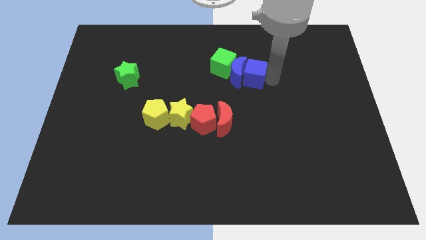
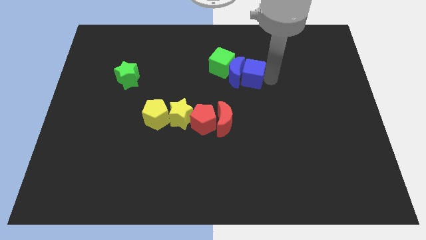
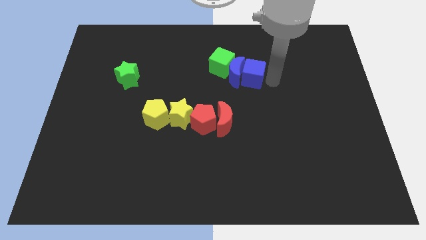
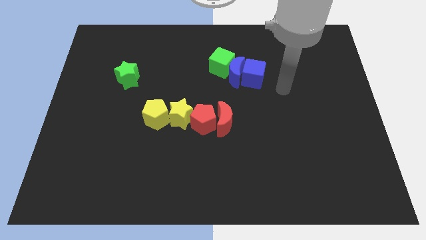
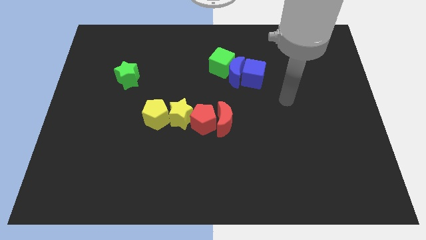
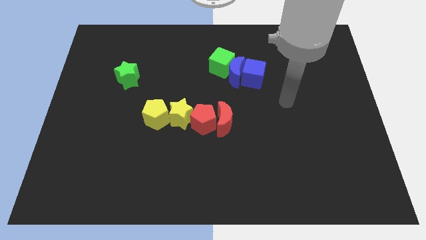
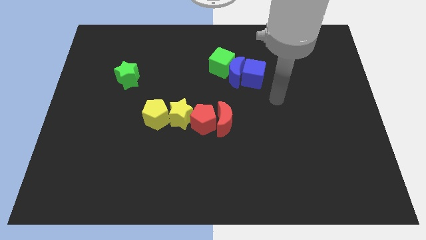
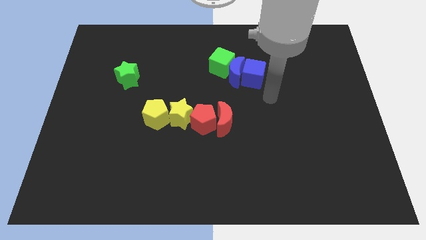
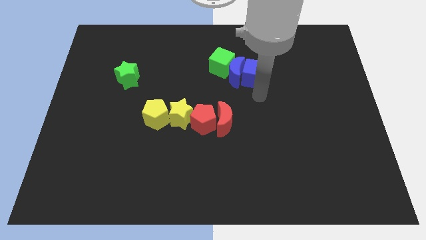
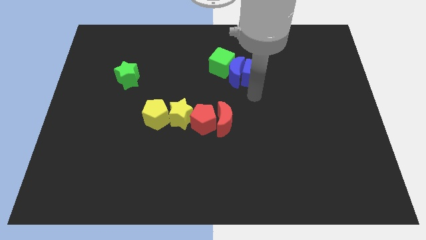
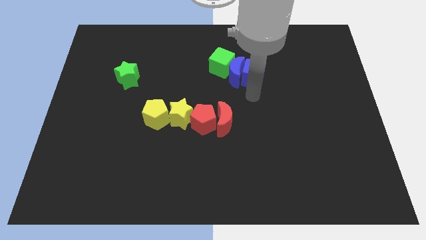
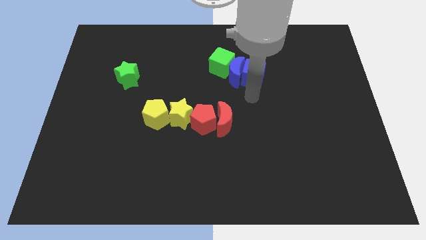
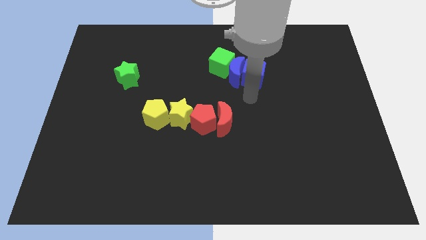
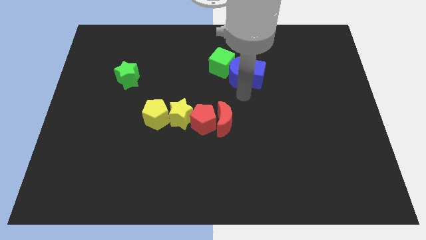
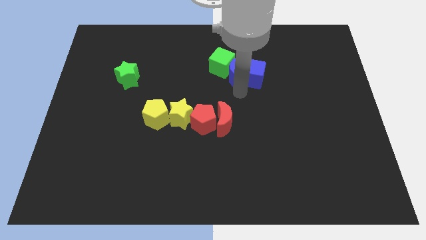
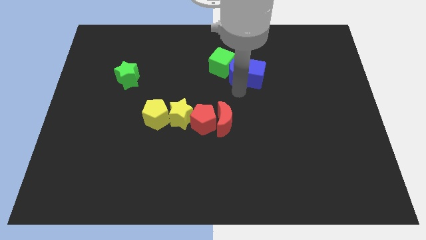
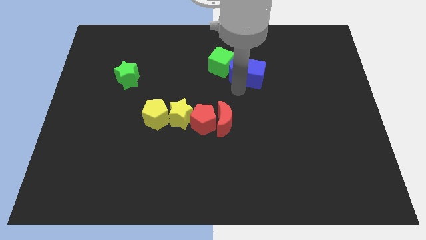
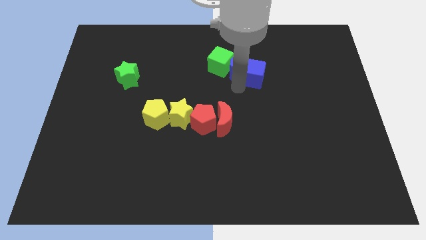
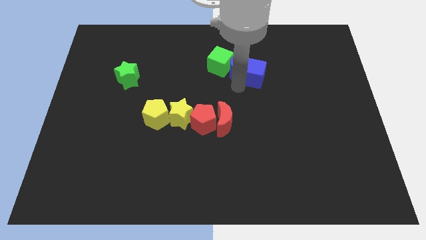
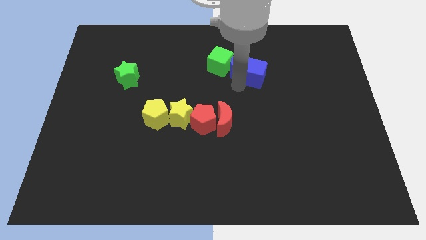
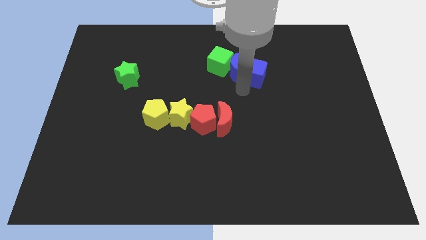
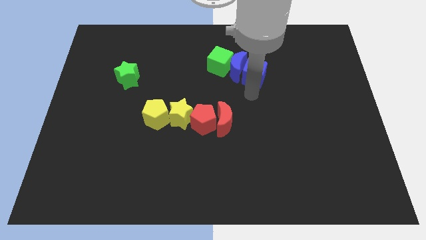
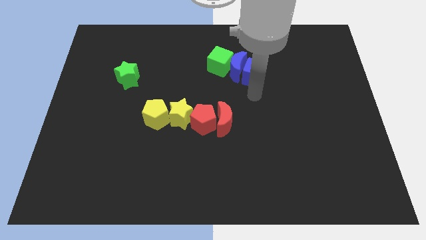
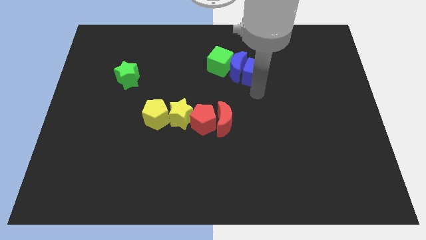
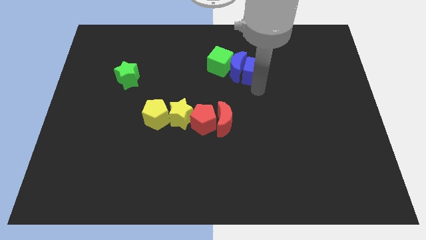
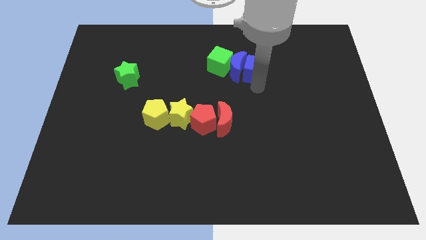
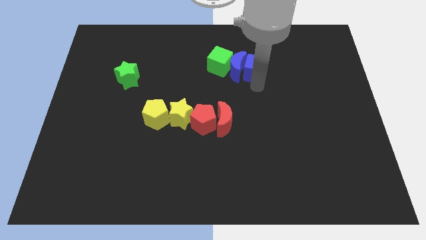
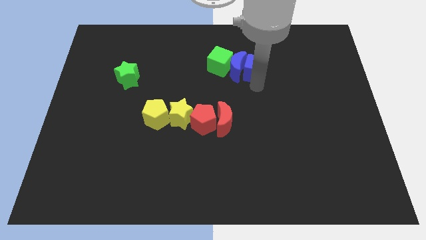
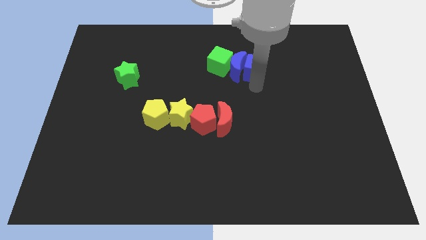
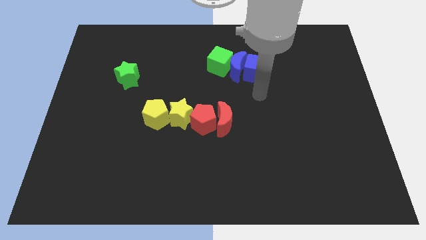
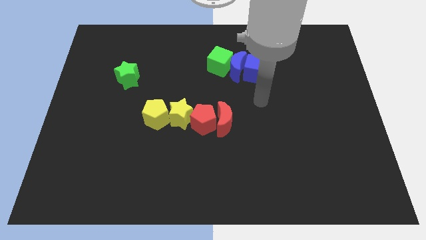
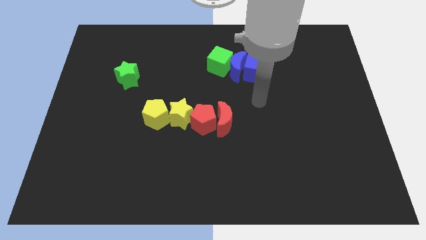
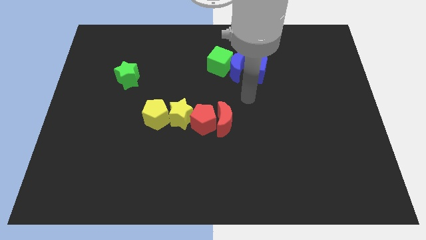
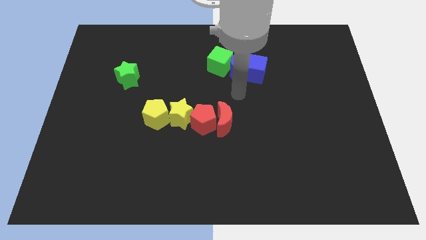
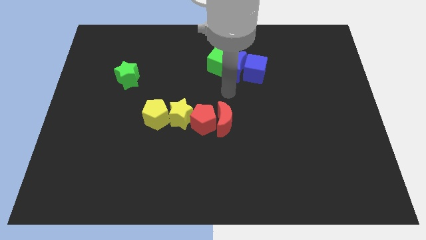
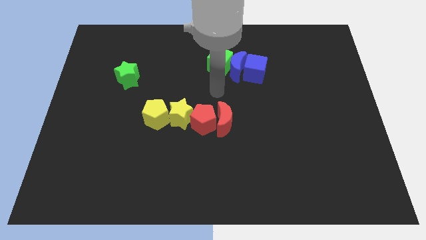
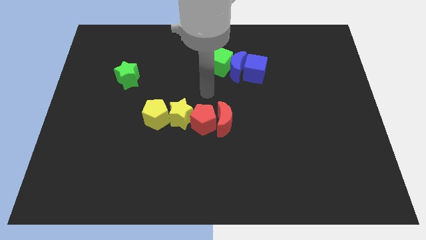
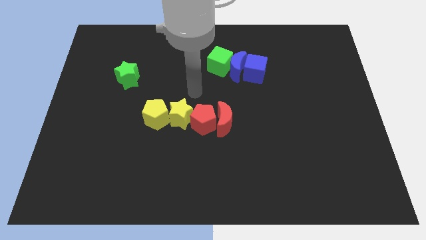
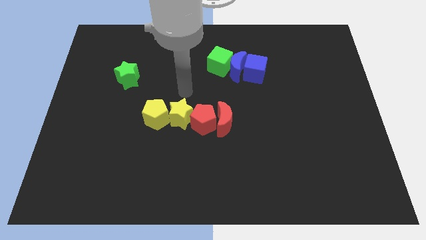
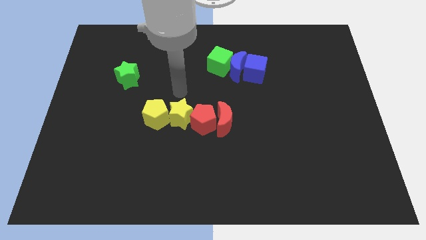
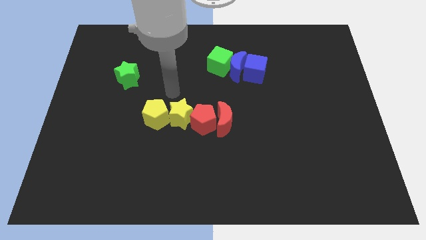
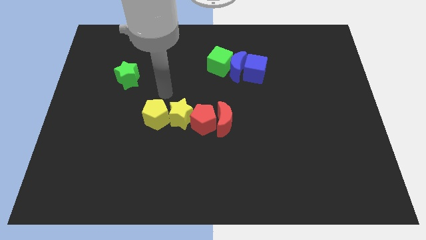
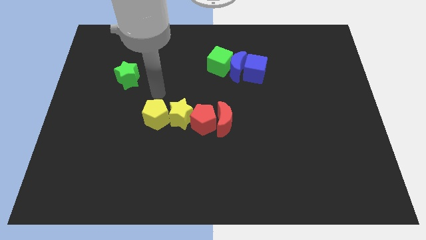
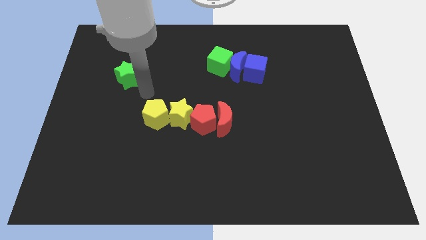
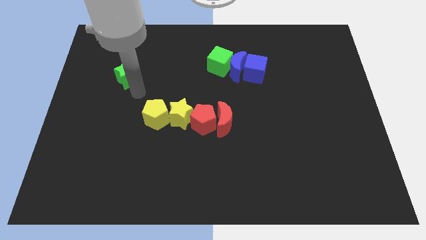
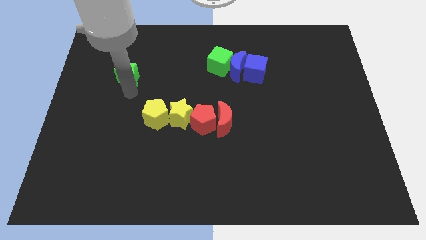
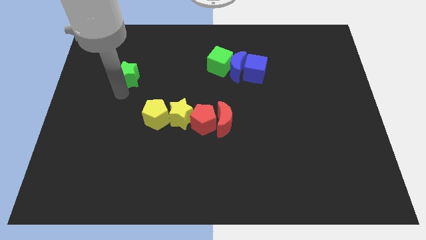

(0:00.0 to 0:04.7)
move your arm to the bottom of the green star

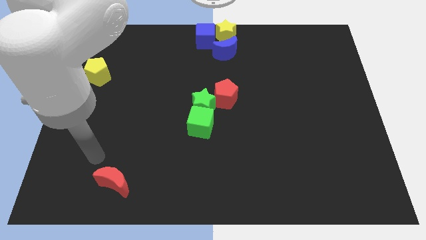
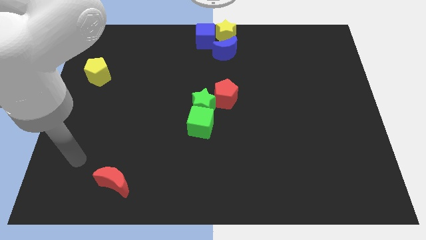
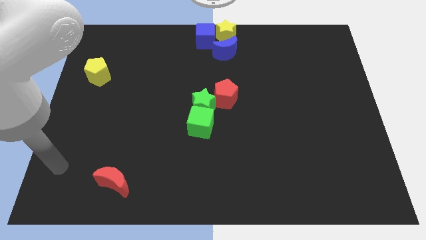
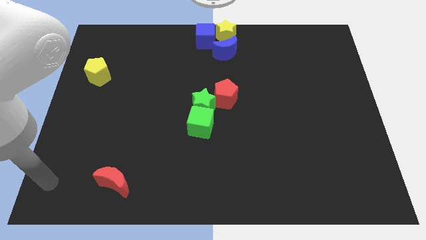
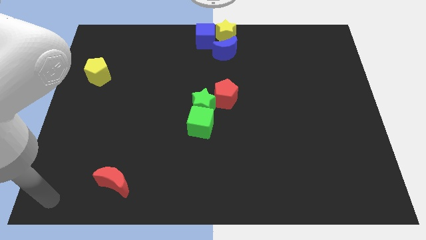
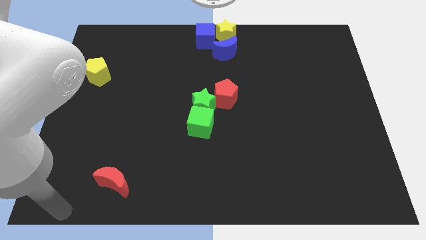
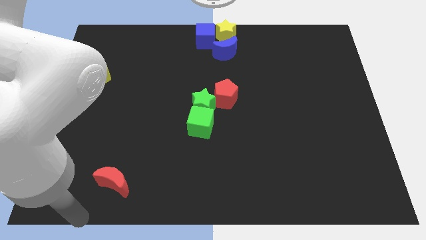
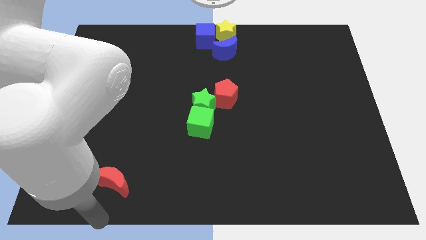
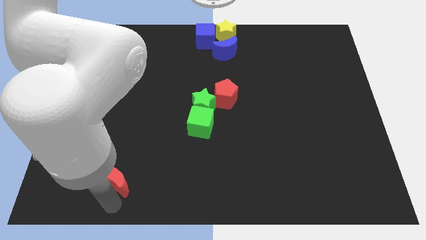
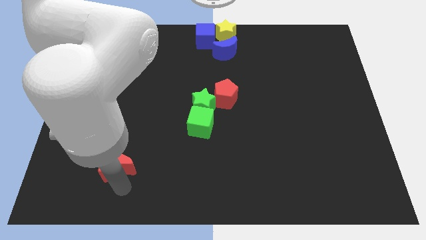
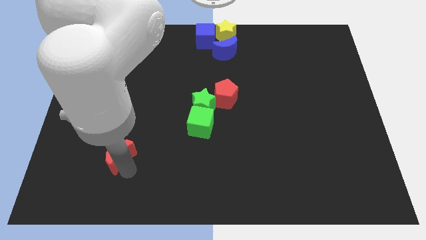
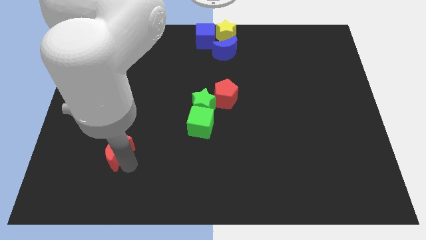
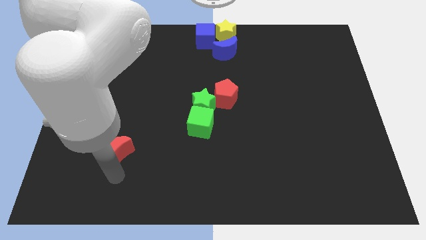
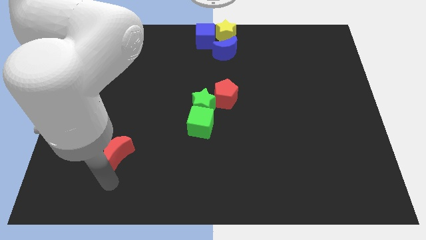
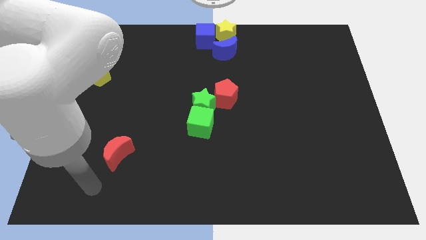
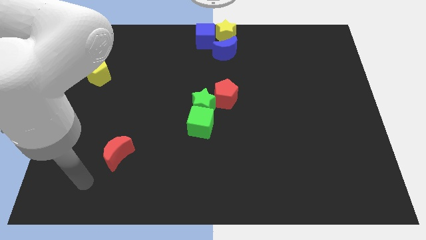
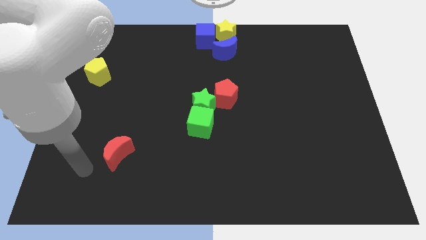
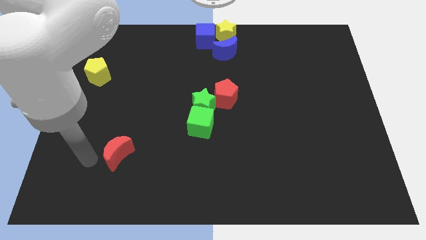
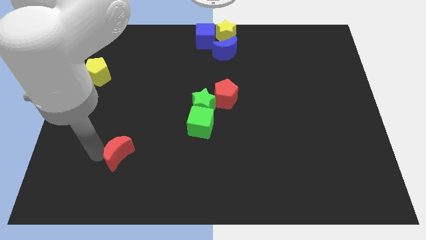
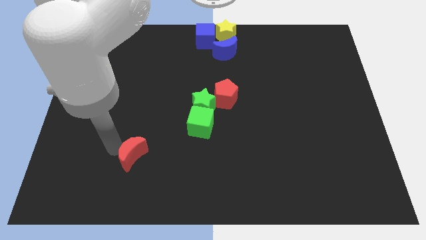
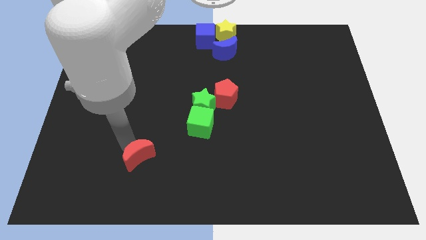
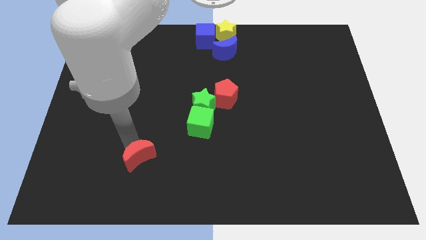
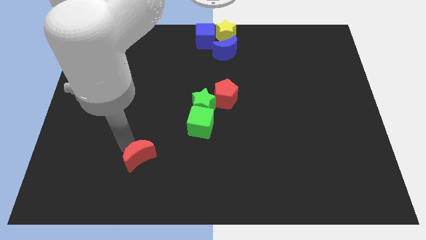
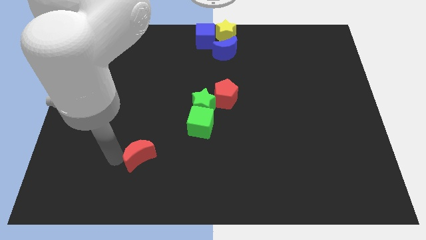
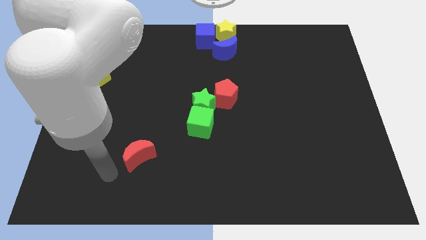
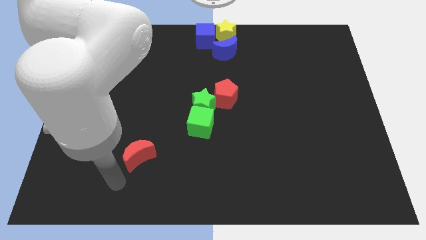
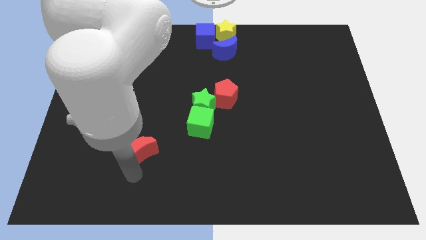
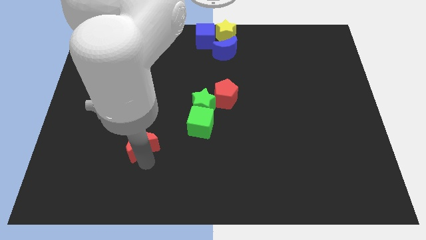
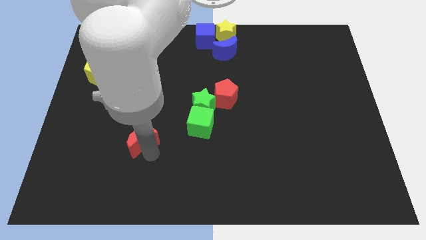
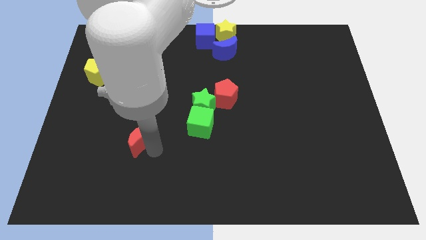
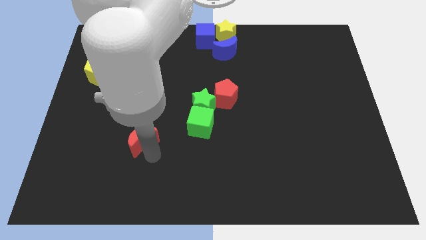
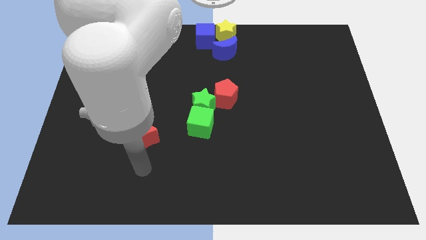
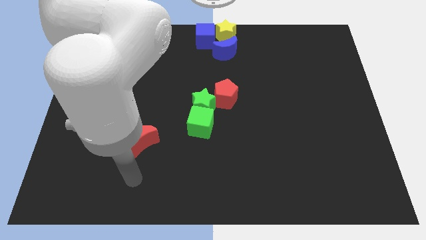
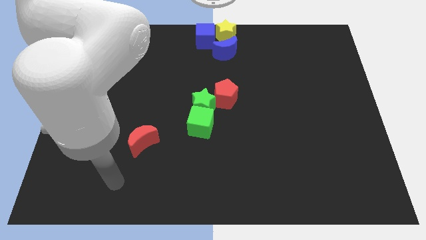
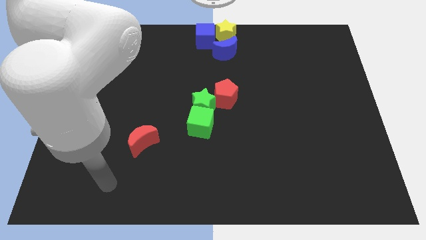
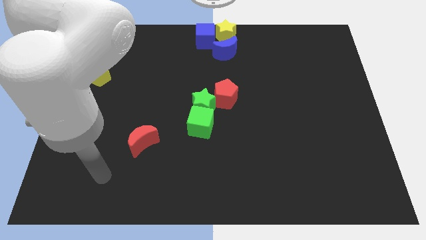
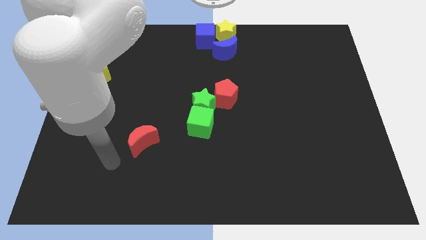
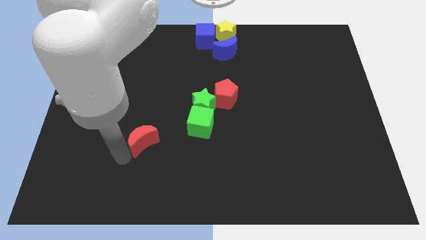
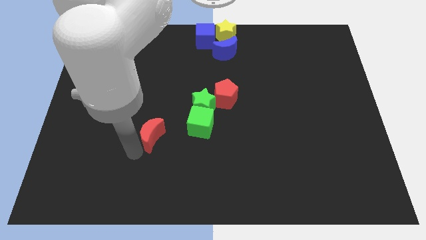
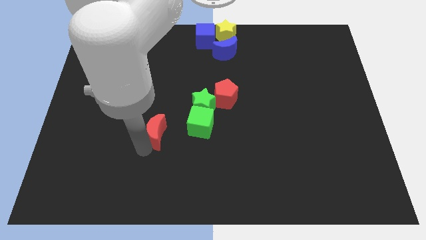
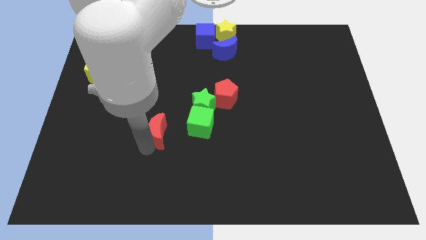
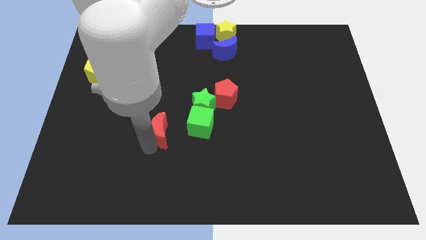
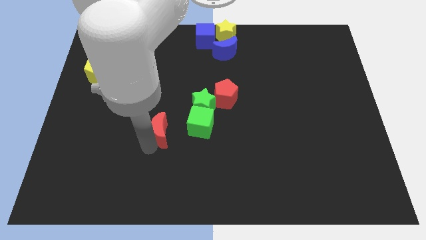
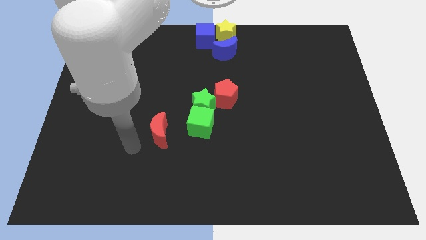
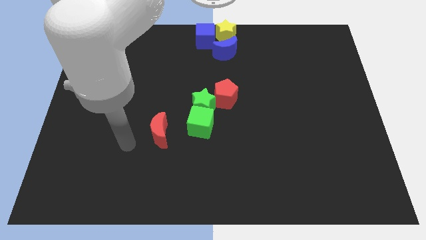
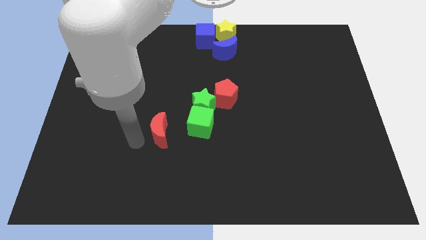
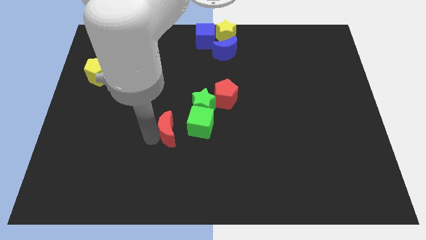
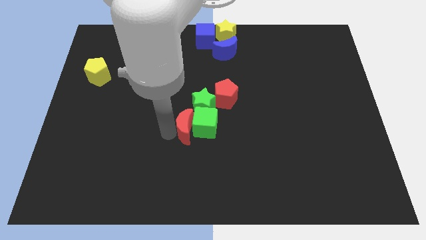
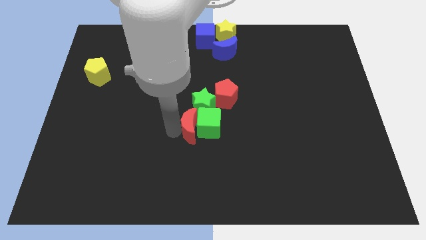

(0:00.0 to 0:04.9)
push the red moon to the left side of the green cube
